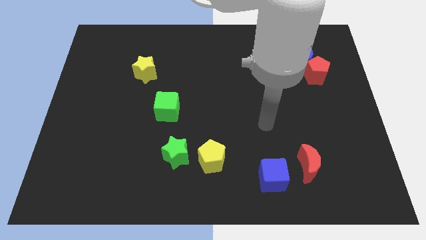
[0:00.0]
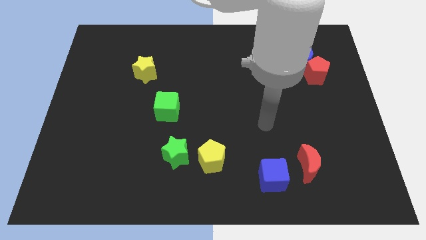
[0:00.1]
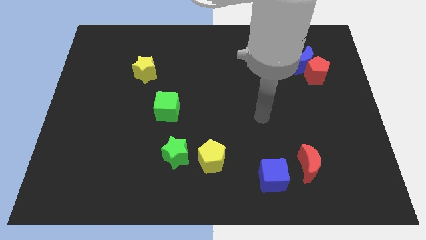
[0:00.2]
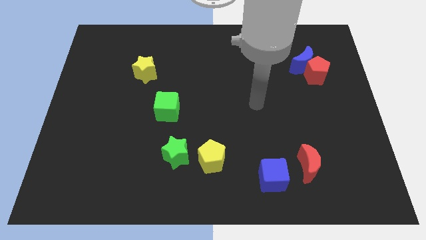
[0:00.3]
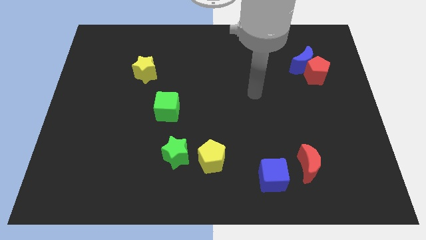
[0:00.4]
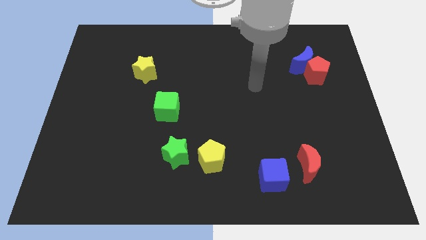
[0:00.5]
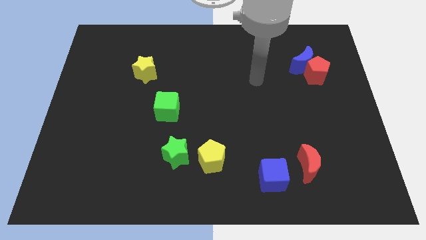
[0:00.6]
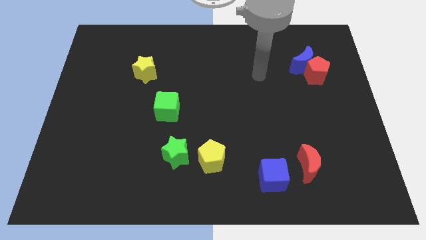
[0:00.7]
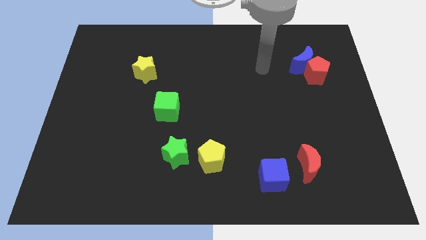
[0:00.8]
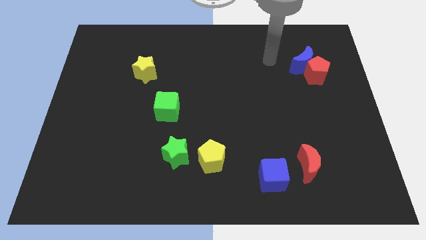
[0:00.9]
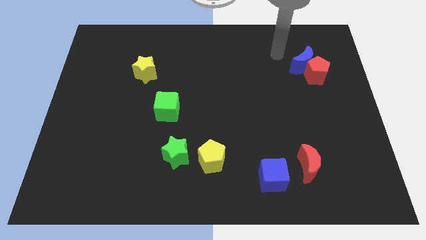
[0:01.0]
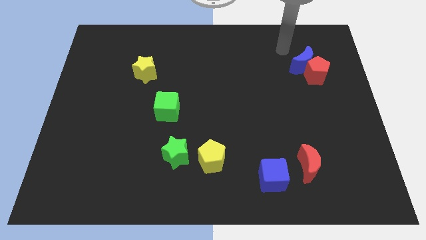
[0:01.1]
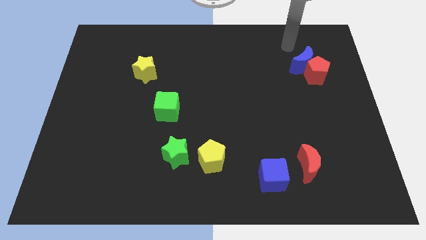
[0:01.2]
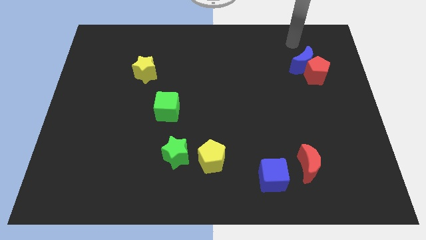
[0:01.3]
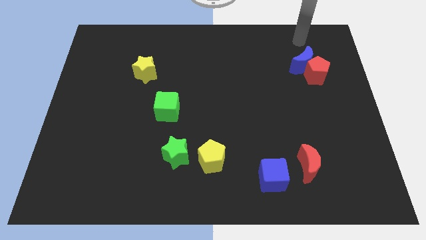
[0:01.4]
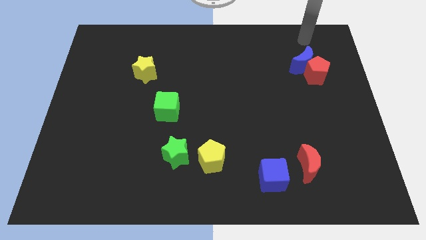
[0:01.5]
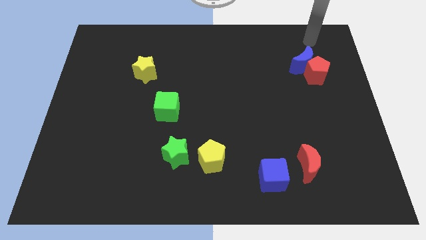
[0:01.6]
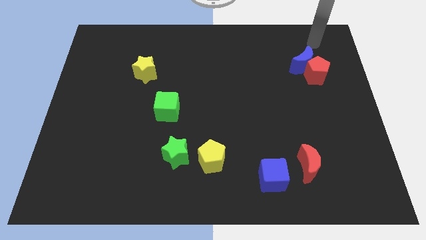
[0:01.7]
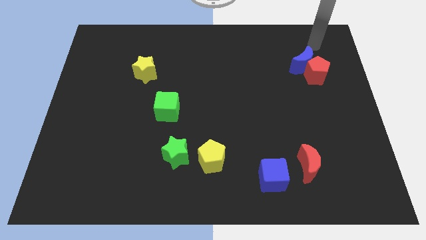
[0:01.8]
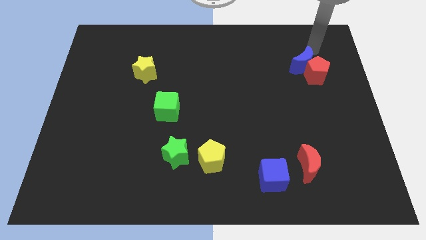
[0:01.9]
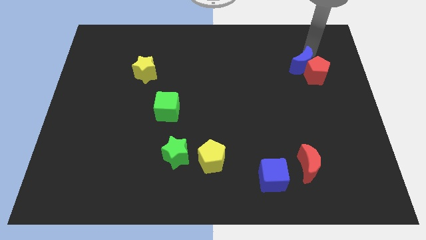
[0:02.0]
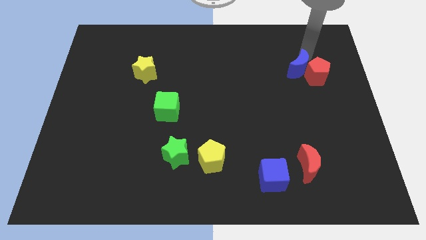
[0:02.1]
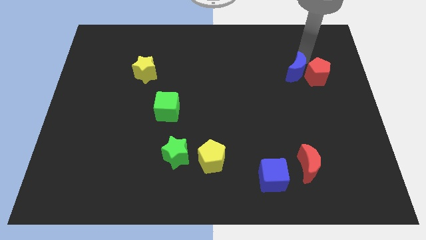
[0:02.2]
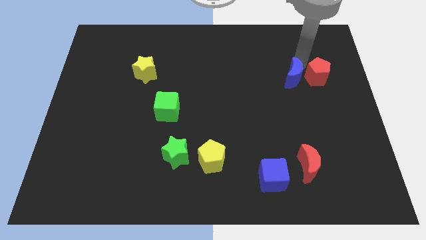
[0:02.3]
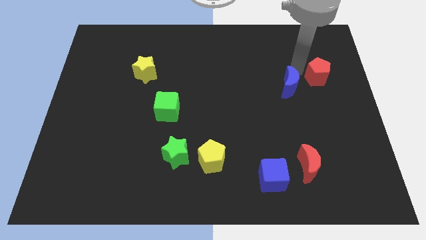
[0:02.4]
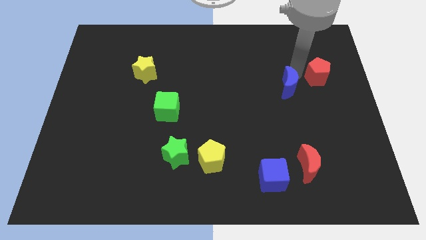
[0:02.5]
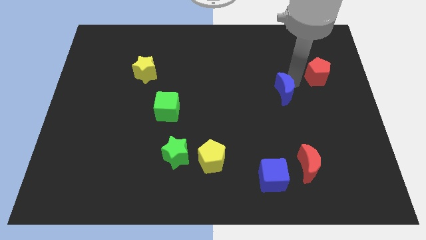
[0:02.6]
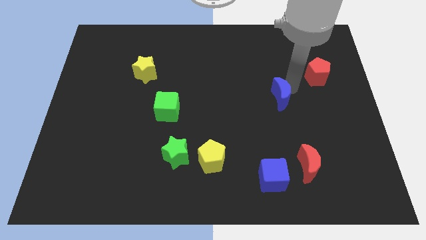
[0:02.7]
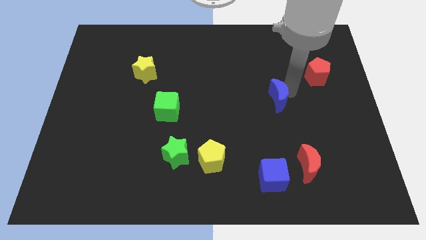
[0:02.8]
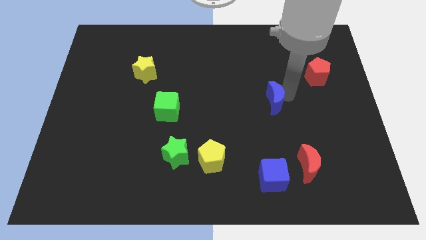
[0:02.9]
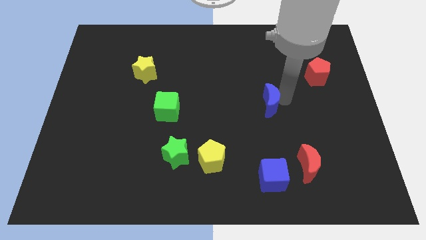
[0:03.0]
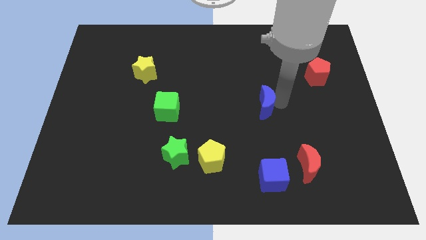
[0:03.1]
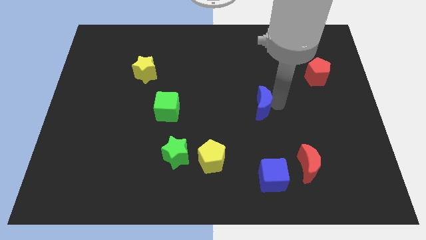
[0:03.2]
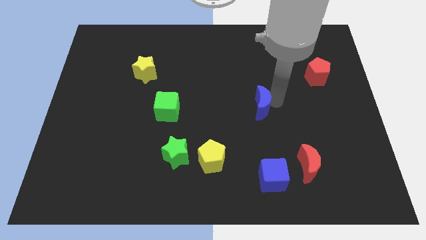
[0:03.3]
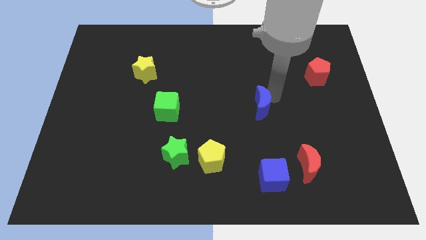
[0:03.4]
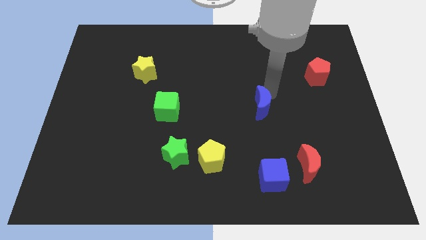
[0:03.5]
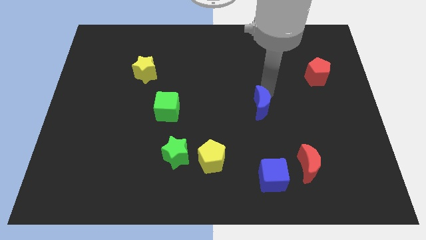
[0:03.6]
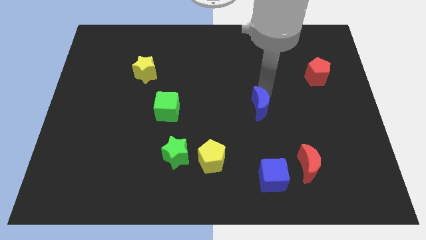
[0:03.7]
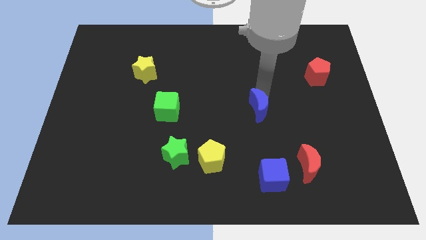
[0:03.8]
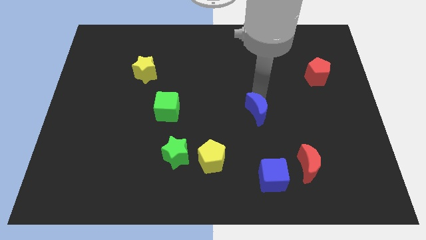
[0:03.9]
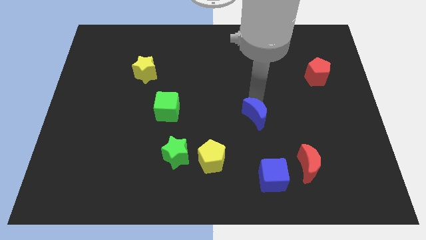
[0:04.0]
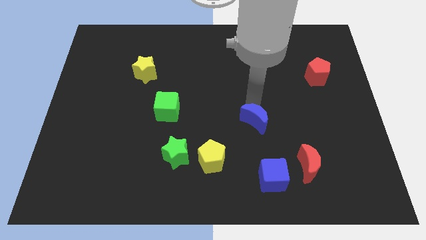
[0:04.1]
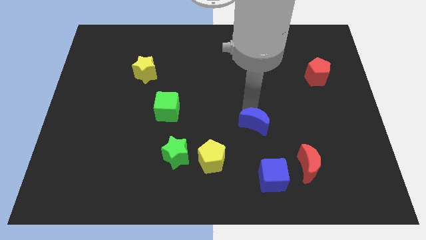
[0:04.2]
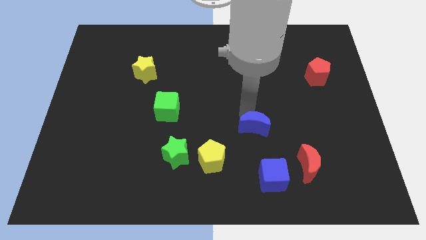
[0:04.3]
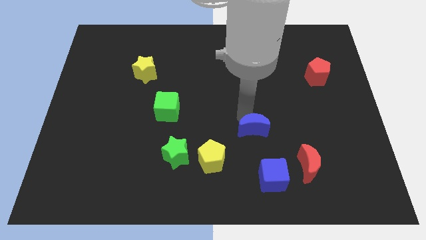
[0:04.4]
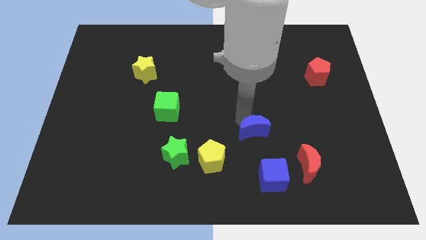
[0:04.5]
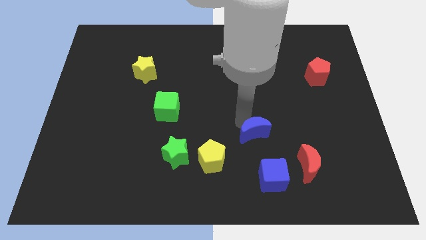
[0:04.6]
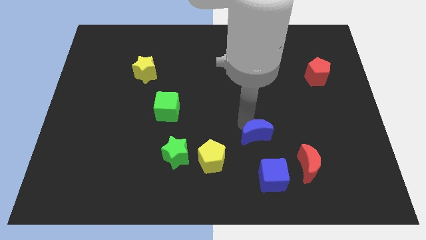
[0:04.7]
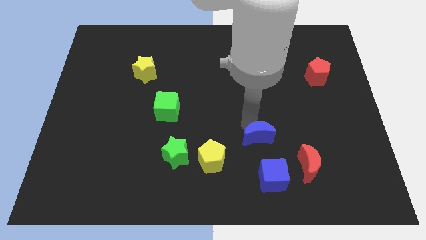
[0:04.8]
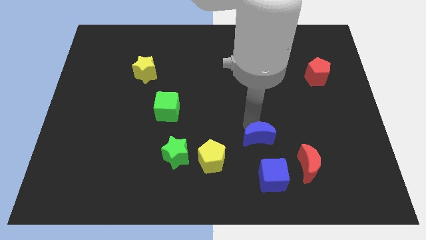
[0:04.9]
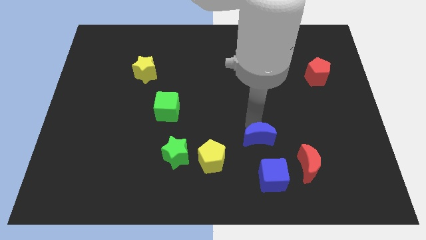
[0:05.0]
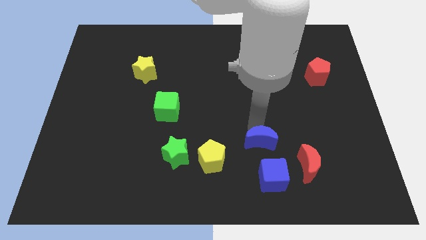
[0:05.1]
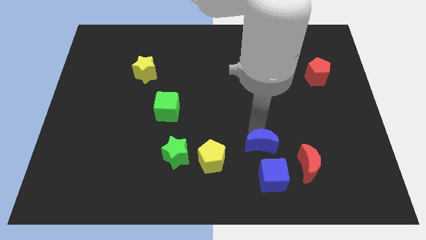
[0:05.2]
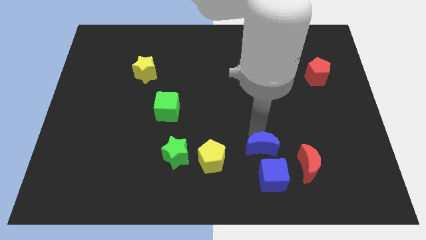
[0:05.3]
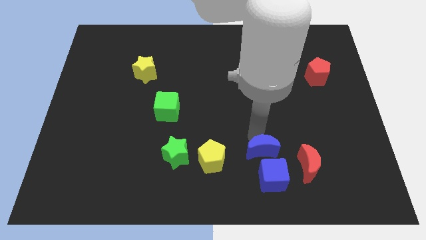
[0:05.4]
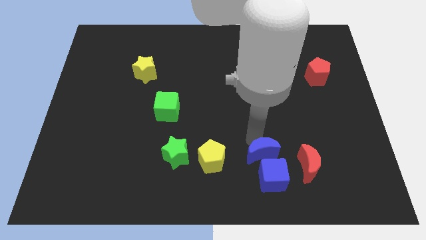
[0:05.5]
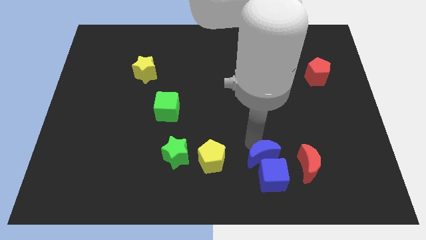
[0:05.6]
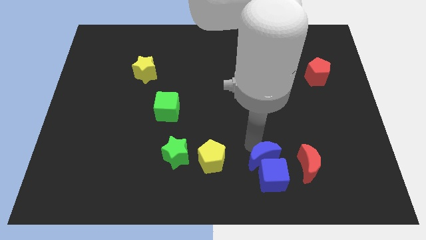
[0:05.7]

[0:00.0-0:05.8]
move the blue moon towards the blue cube

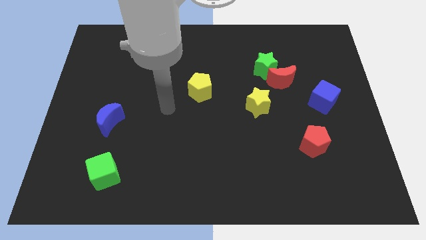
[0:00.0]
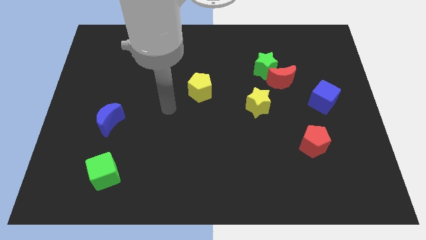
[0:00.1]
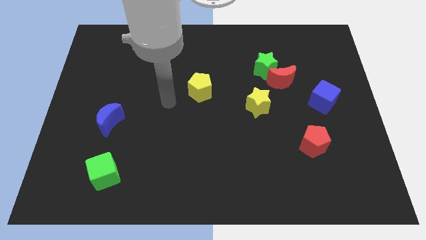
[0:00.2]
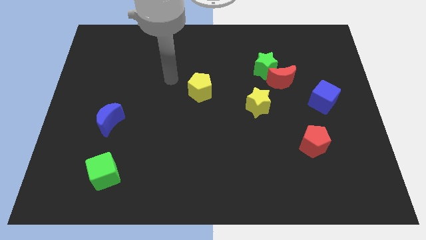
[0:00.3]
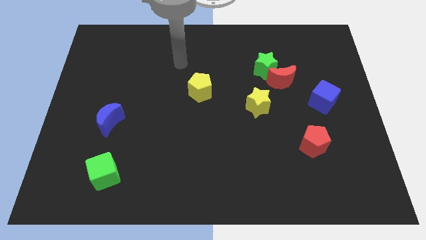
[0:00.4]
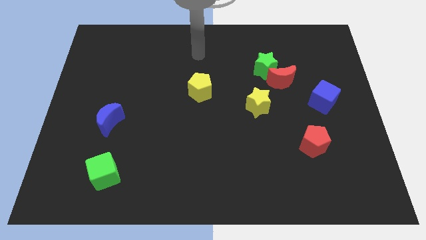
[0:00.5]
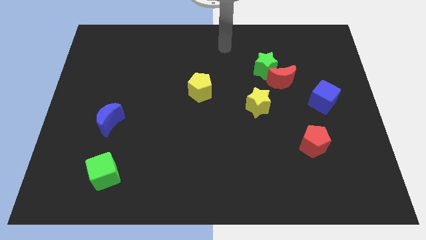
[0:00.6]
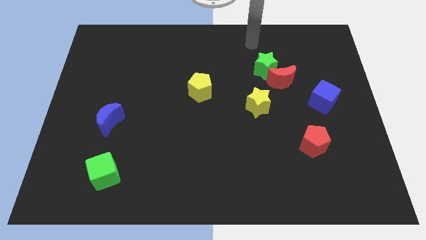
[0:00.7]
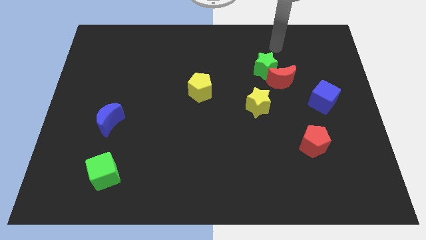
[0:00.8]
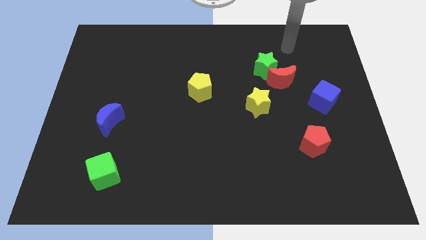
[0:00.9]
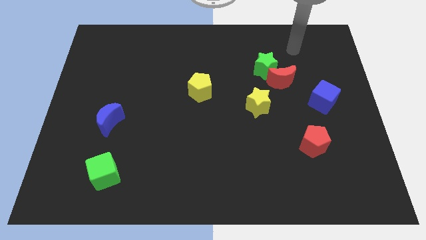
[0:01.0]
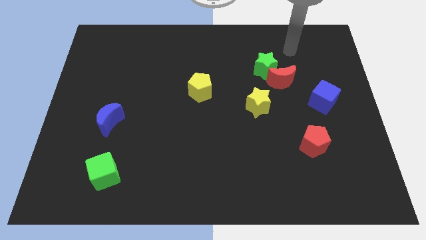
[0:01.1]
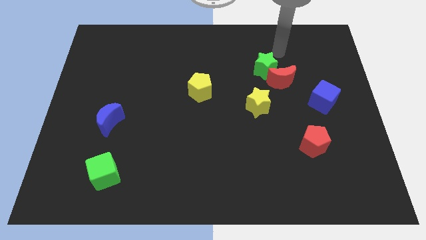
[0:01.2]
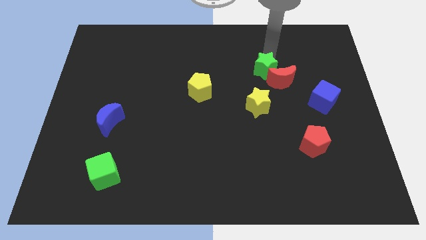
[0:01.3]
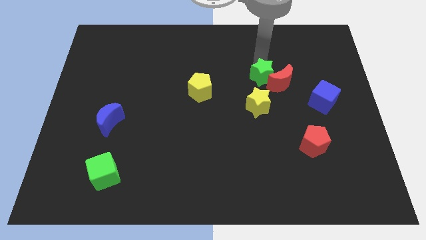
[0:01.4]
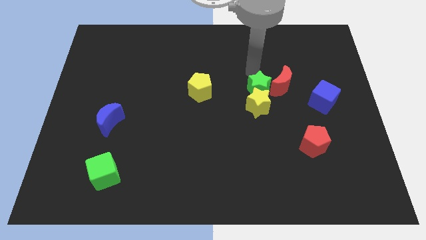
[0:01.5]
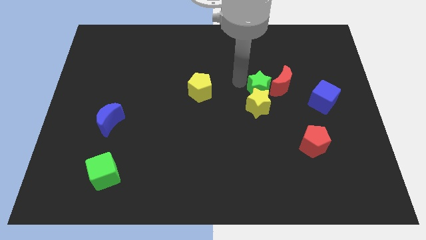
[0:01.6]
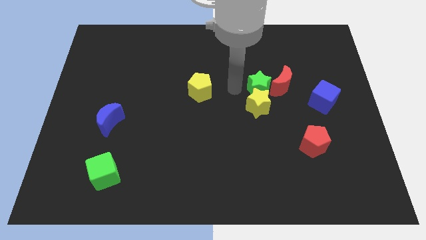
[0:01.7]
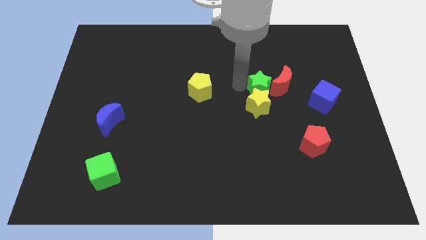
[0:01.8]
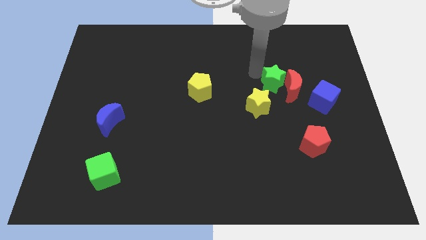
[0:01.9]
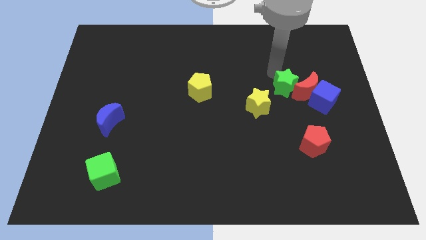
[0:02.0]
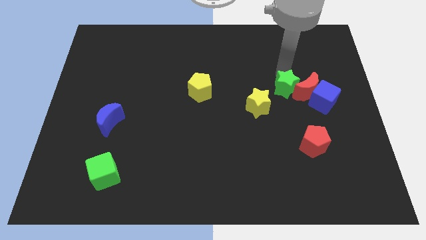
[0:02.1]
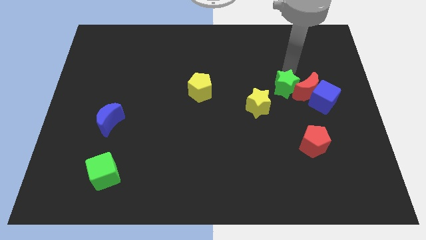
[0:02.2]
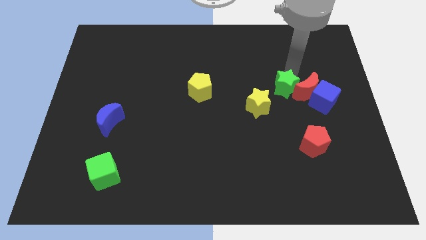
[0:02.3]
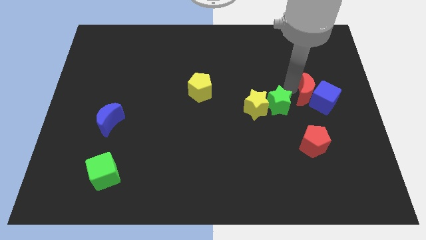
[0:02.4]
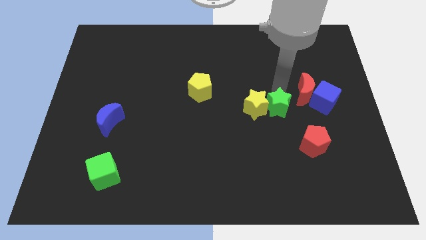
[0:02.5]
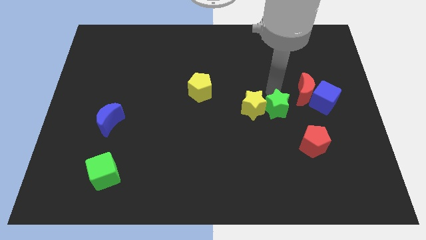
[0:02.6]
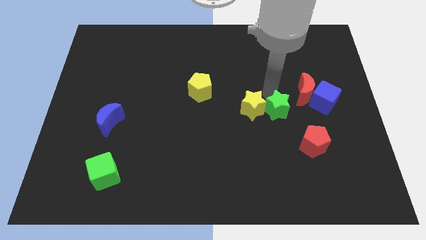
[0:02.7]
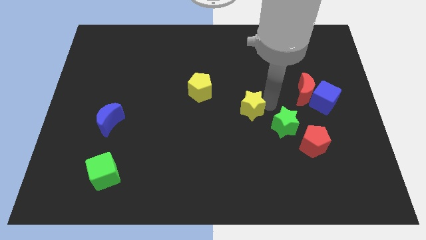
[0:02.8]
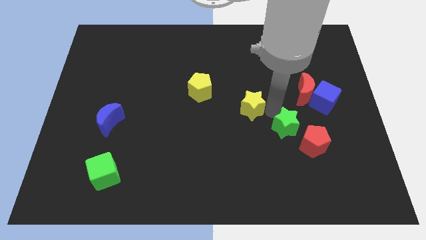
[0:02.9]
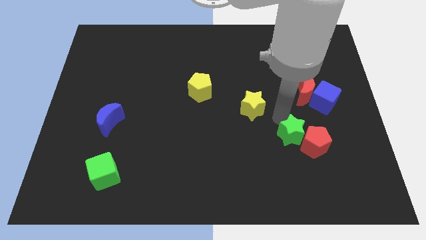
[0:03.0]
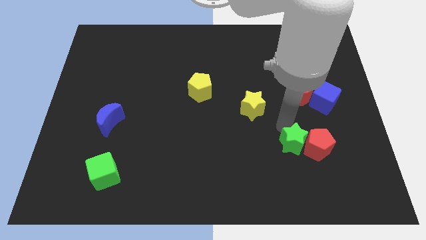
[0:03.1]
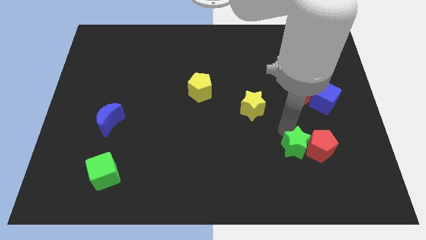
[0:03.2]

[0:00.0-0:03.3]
move the green star close to the red pentagon
